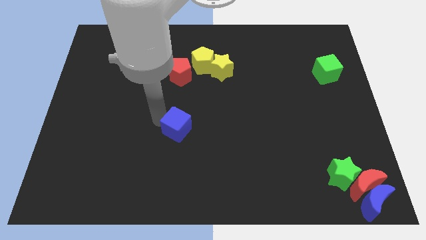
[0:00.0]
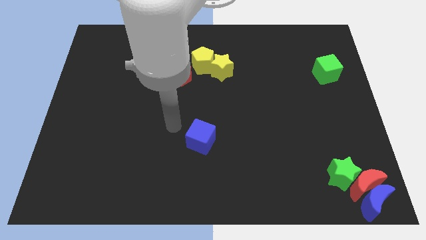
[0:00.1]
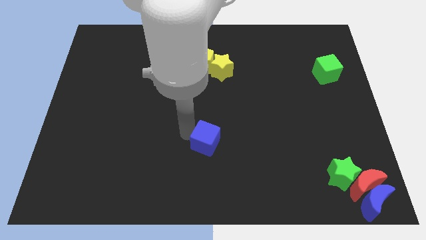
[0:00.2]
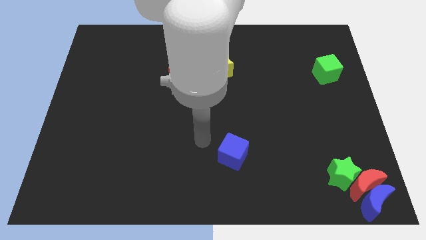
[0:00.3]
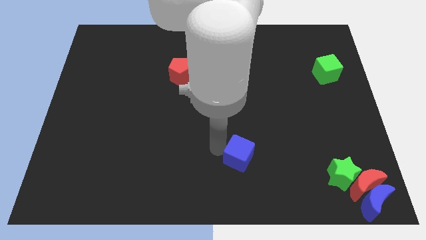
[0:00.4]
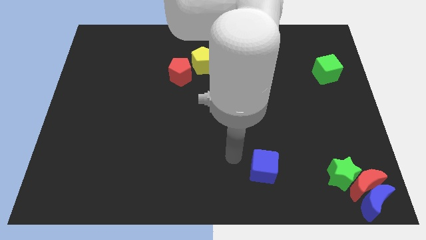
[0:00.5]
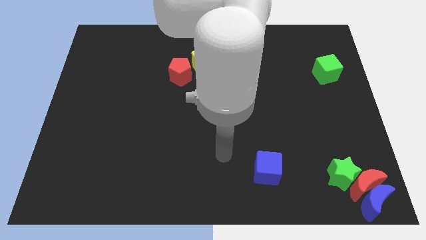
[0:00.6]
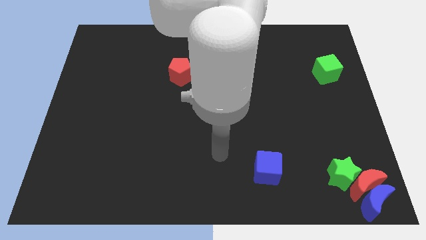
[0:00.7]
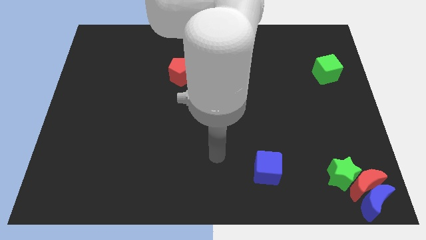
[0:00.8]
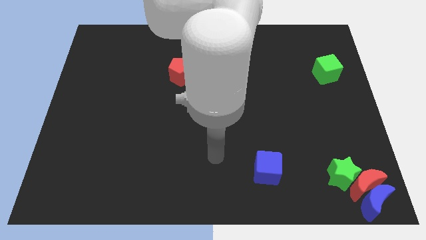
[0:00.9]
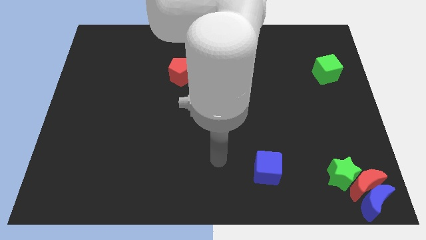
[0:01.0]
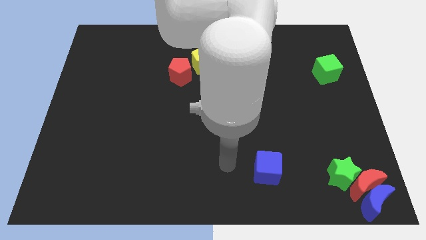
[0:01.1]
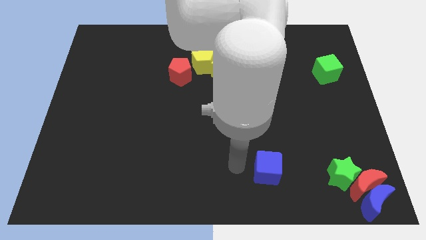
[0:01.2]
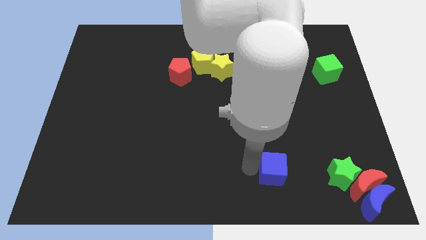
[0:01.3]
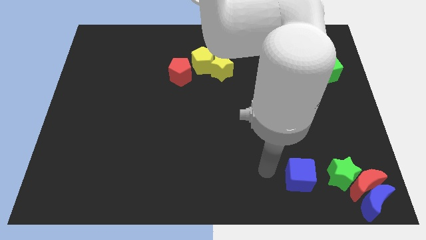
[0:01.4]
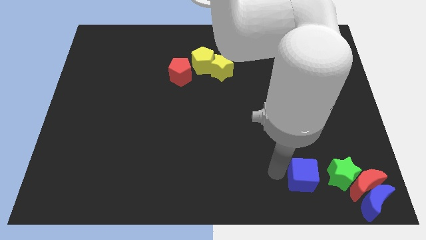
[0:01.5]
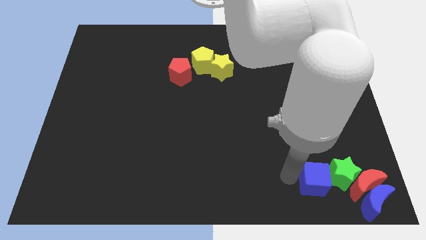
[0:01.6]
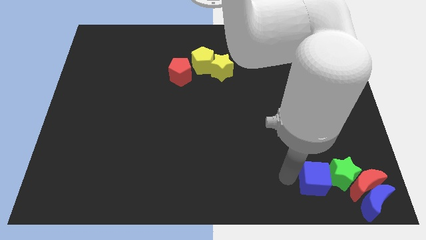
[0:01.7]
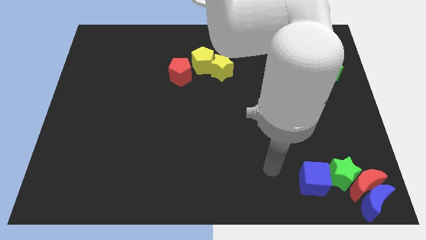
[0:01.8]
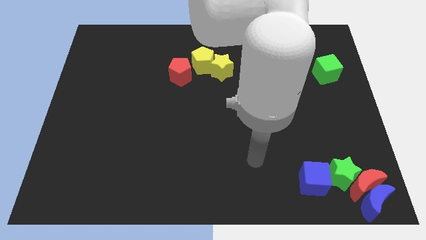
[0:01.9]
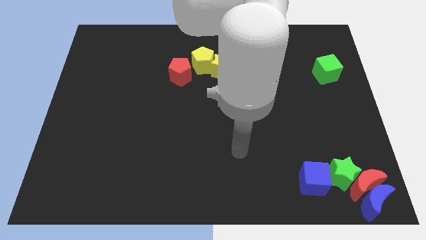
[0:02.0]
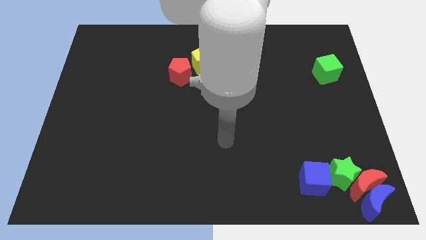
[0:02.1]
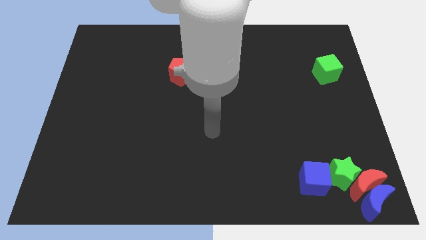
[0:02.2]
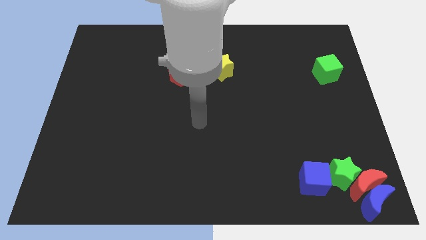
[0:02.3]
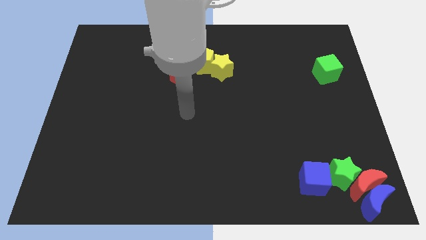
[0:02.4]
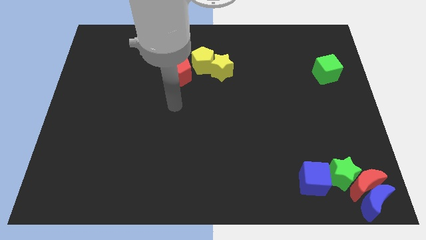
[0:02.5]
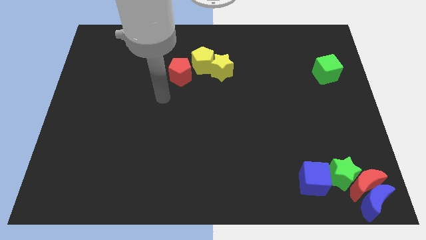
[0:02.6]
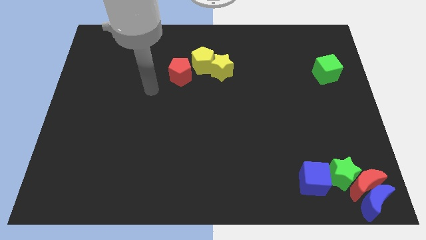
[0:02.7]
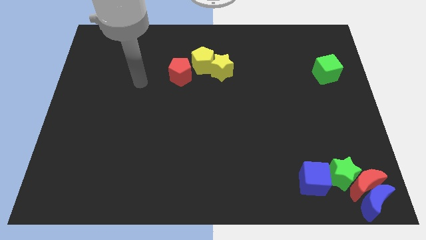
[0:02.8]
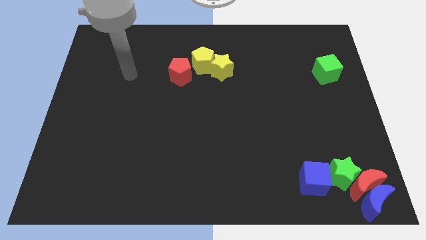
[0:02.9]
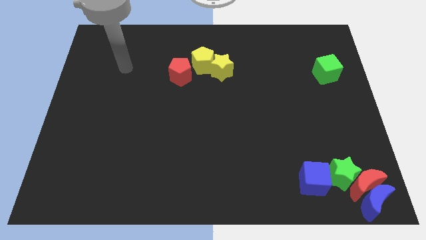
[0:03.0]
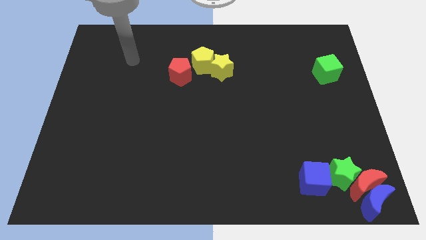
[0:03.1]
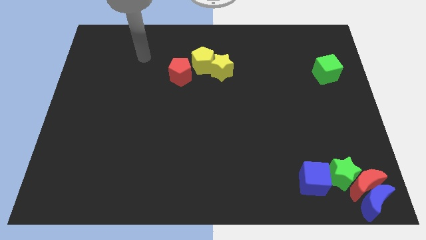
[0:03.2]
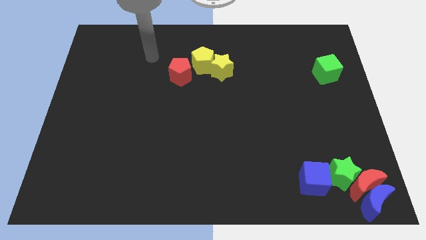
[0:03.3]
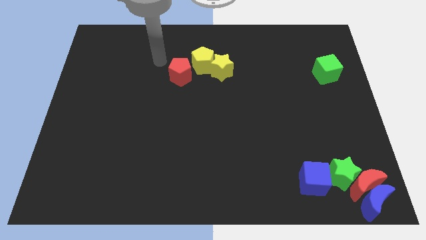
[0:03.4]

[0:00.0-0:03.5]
push the blue cube close to the green star

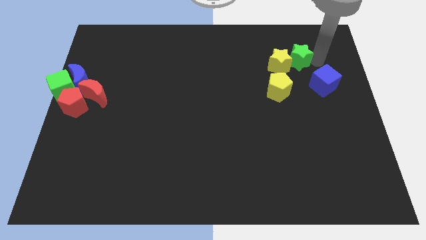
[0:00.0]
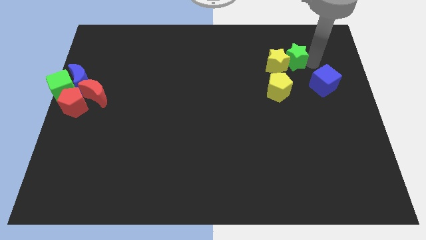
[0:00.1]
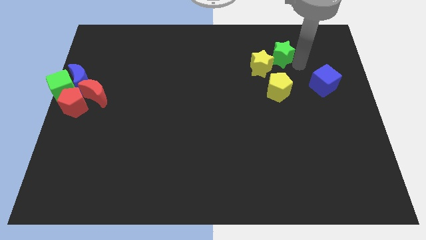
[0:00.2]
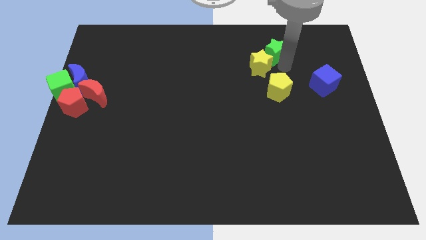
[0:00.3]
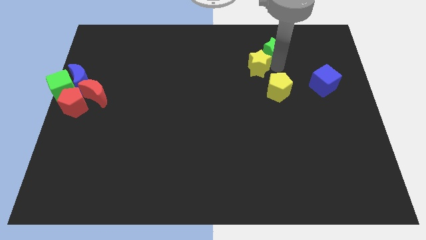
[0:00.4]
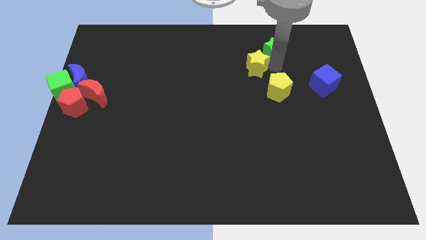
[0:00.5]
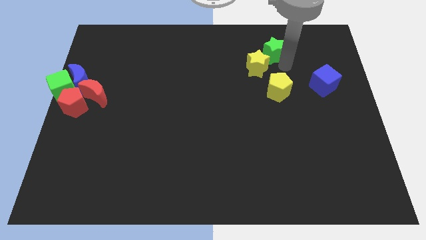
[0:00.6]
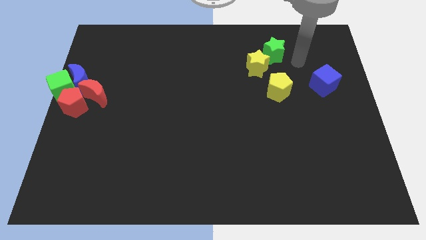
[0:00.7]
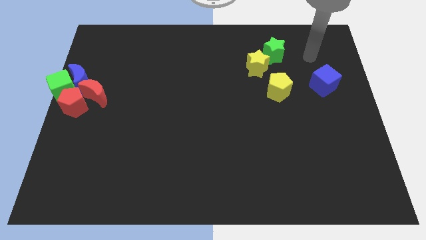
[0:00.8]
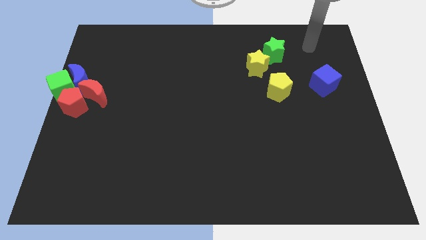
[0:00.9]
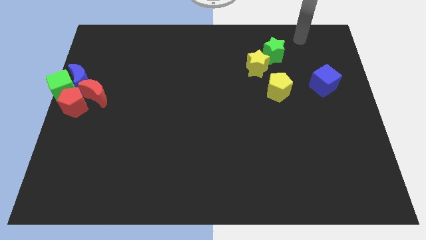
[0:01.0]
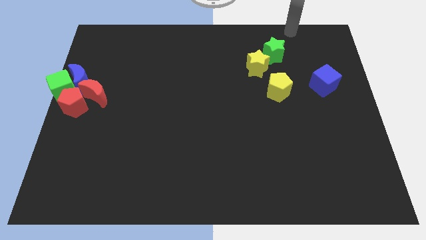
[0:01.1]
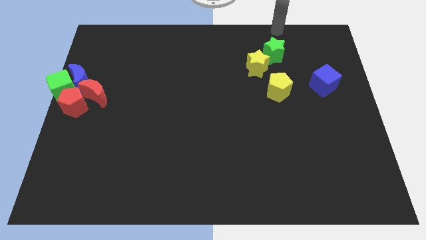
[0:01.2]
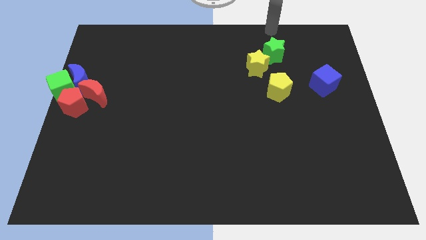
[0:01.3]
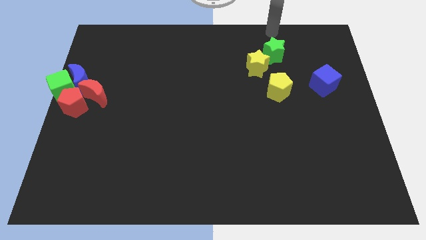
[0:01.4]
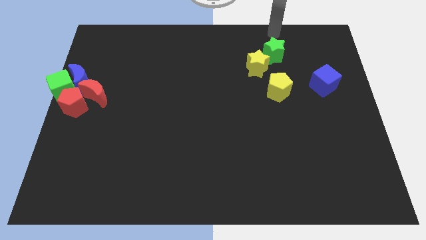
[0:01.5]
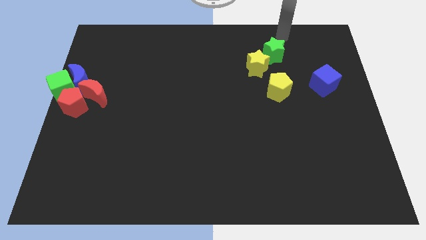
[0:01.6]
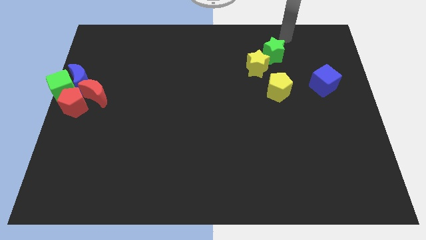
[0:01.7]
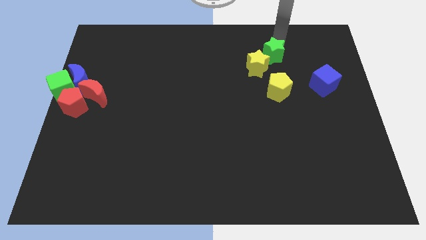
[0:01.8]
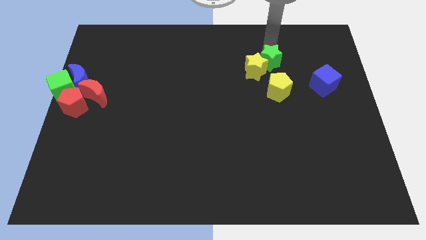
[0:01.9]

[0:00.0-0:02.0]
push the green star into the yellow star

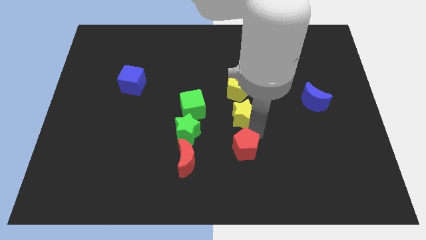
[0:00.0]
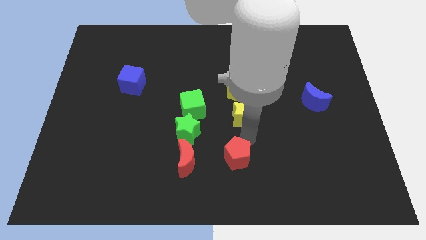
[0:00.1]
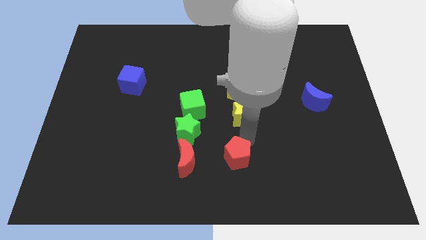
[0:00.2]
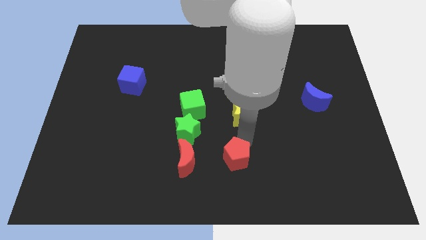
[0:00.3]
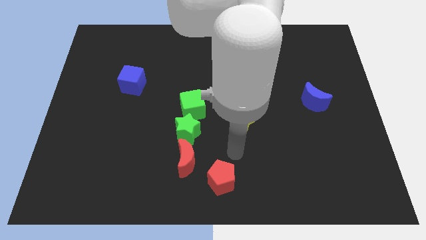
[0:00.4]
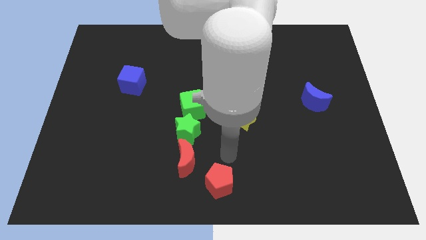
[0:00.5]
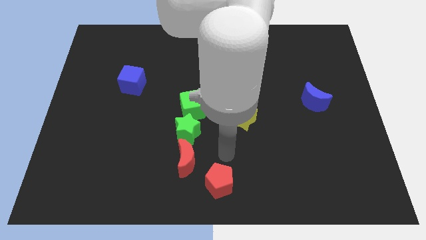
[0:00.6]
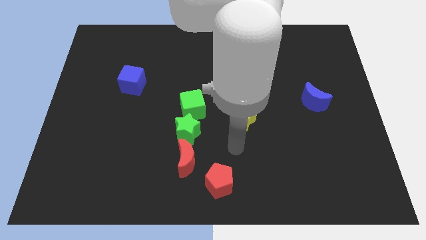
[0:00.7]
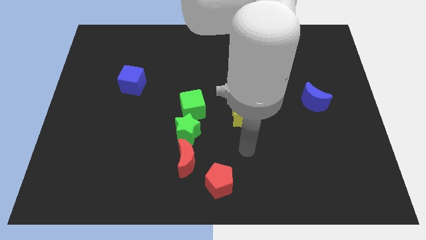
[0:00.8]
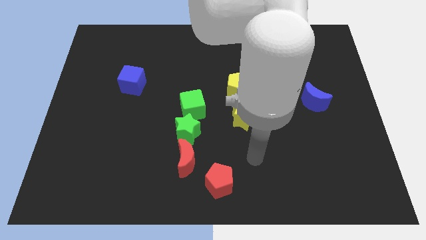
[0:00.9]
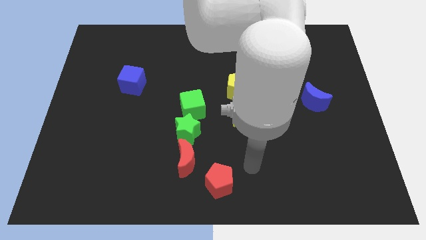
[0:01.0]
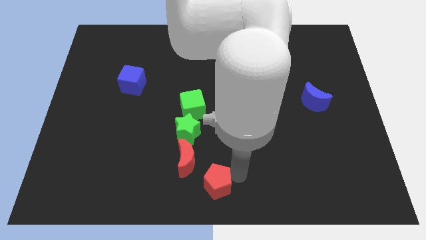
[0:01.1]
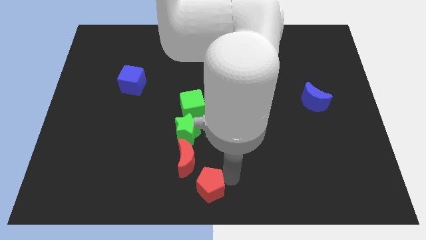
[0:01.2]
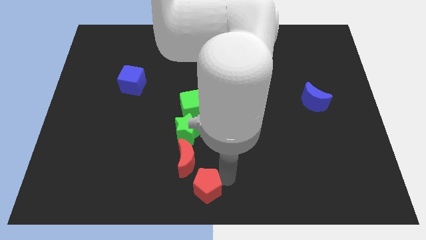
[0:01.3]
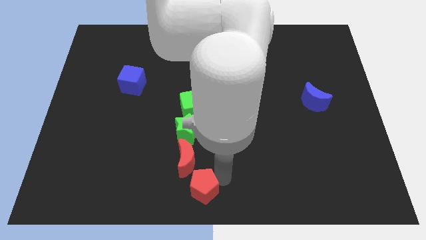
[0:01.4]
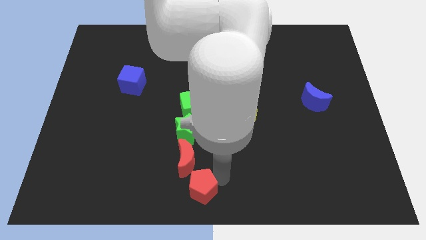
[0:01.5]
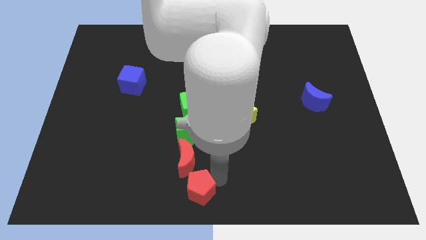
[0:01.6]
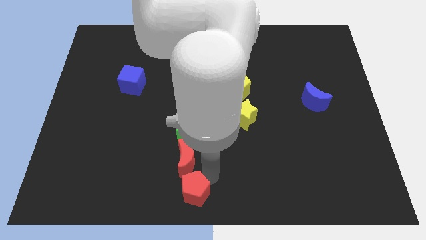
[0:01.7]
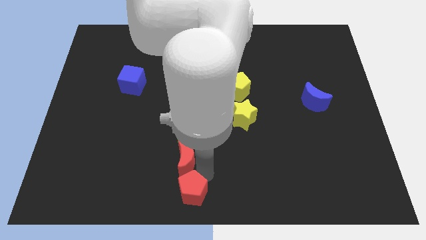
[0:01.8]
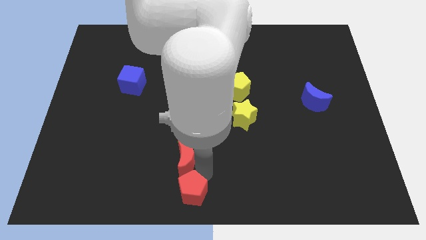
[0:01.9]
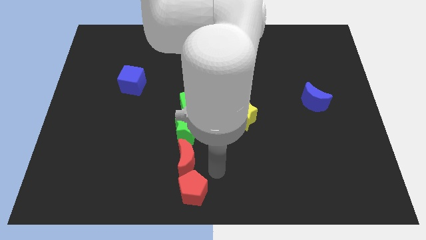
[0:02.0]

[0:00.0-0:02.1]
place red pentagon below red moon

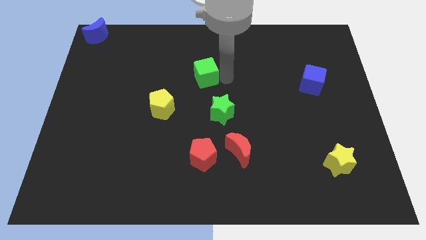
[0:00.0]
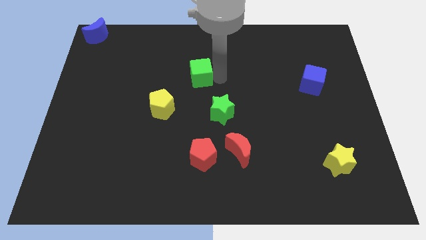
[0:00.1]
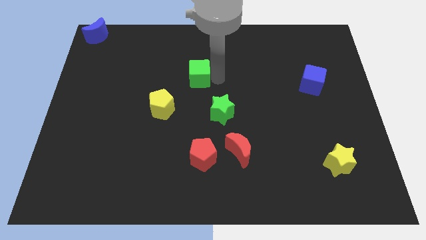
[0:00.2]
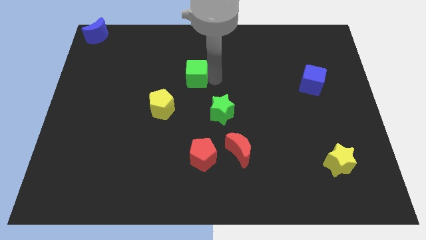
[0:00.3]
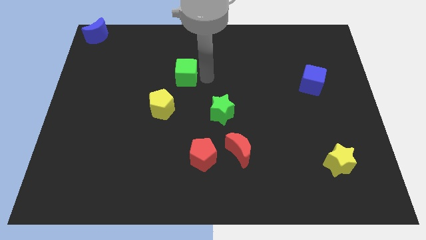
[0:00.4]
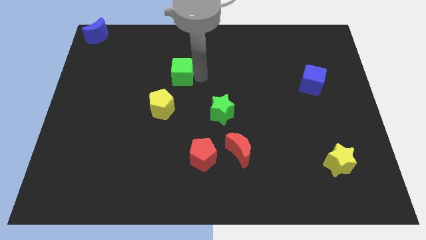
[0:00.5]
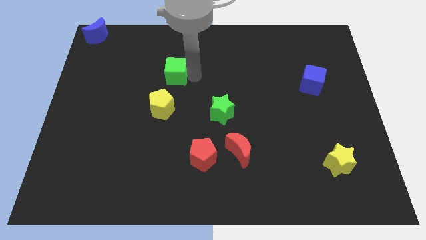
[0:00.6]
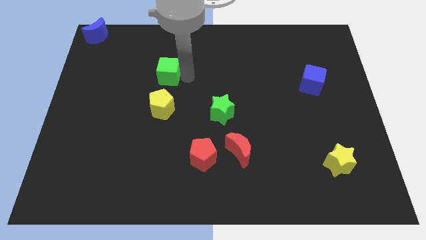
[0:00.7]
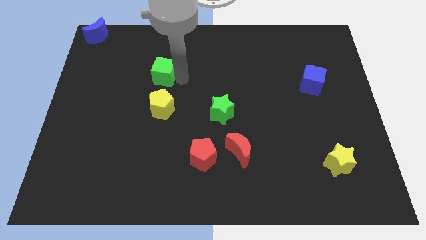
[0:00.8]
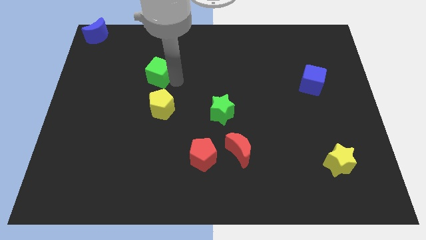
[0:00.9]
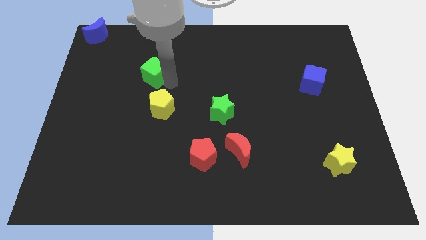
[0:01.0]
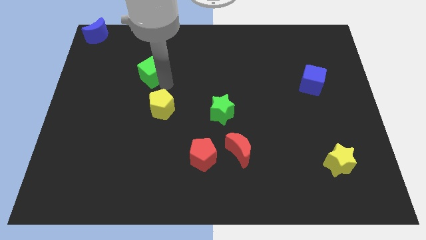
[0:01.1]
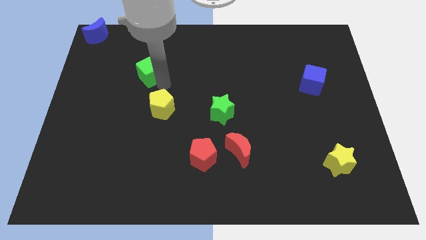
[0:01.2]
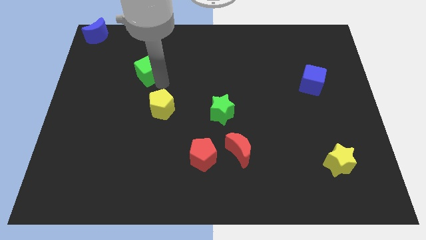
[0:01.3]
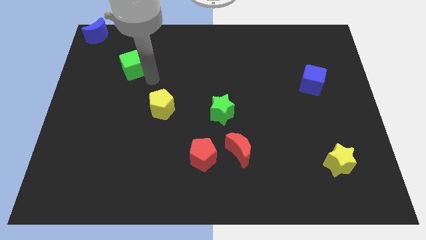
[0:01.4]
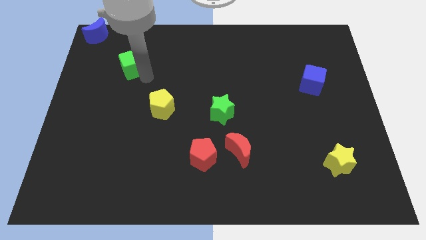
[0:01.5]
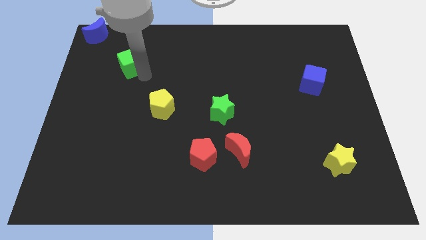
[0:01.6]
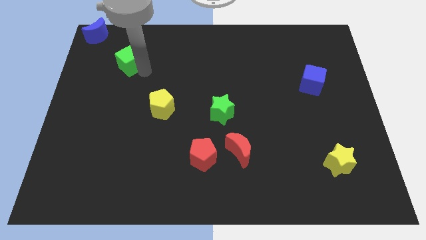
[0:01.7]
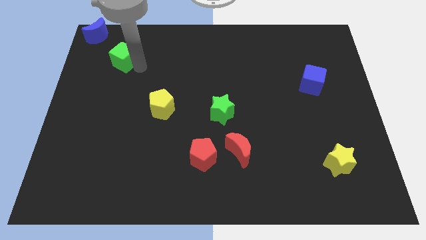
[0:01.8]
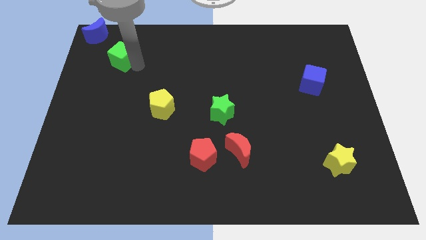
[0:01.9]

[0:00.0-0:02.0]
push the green cube towards the blue crescent
